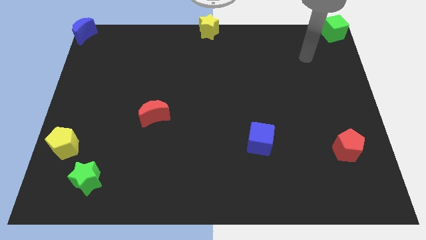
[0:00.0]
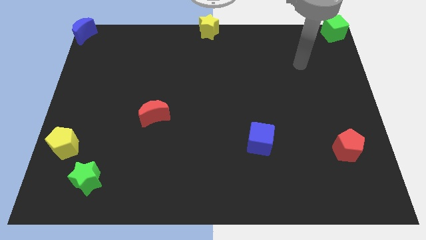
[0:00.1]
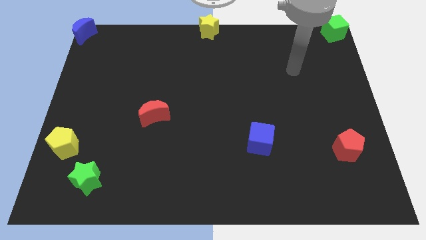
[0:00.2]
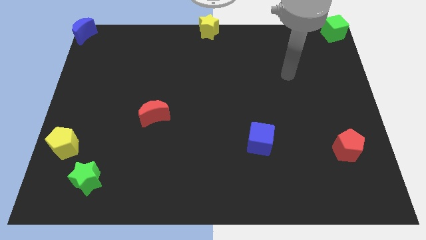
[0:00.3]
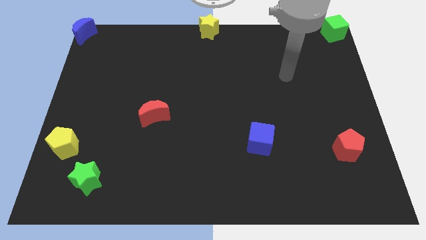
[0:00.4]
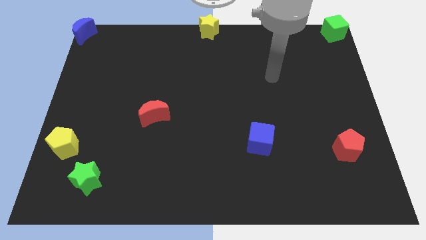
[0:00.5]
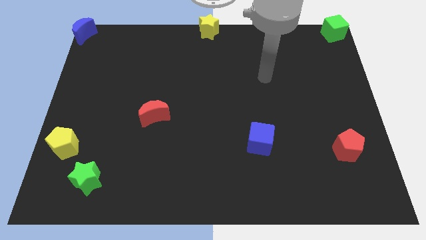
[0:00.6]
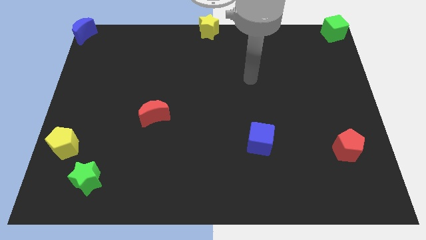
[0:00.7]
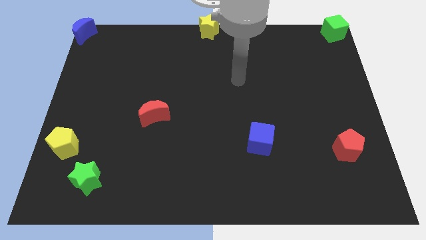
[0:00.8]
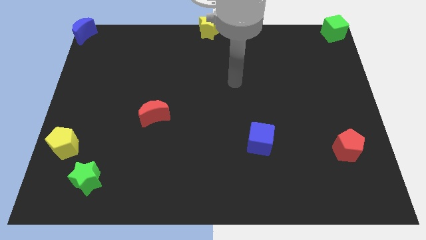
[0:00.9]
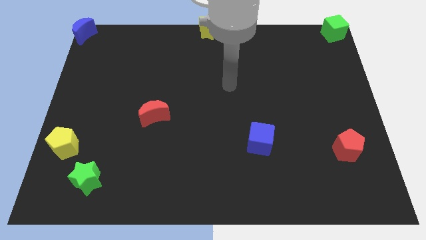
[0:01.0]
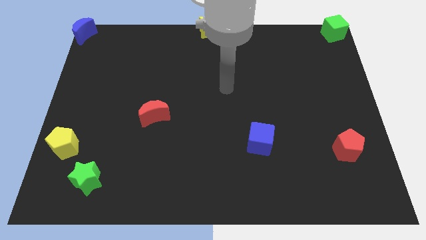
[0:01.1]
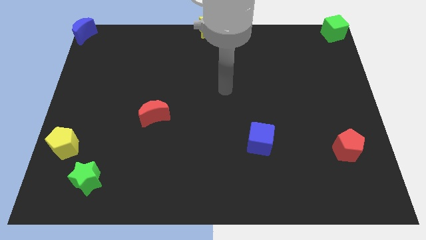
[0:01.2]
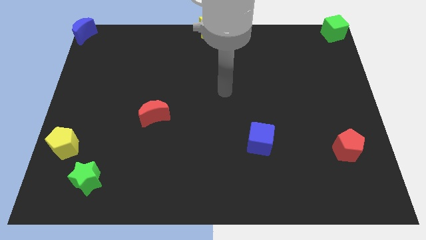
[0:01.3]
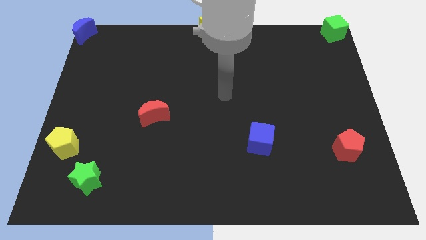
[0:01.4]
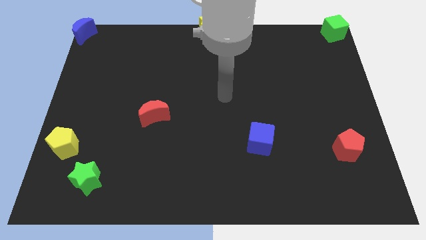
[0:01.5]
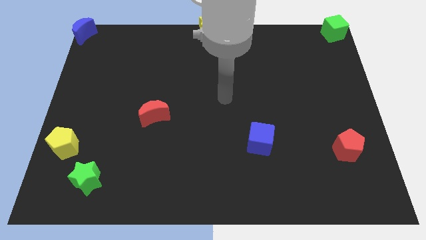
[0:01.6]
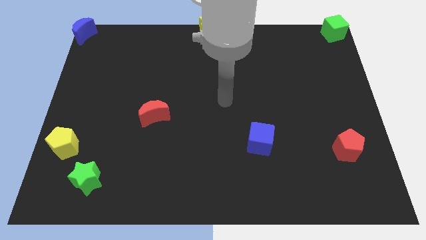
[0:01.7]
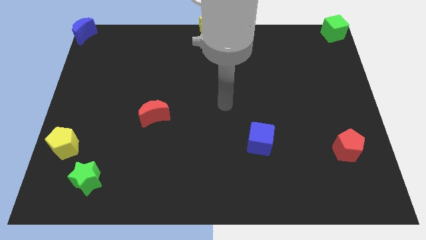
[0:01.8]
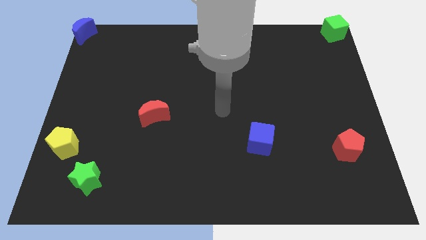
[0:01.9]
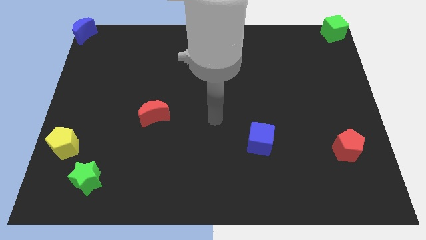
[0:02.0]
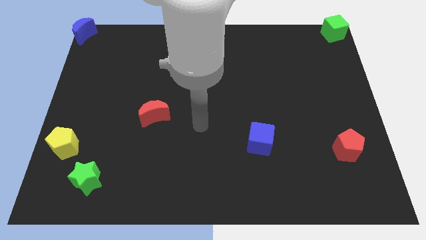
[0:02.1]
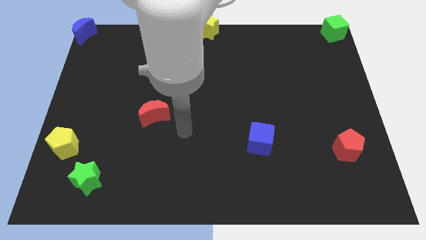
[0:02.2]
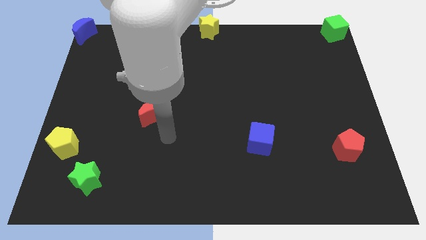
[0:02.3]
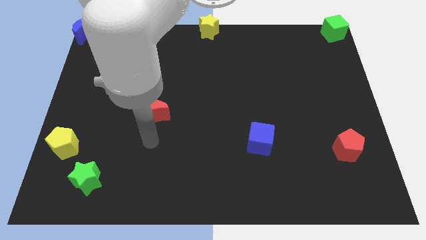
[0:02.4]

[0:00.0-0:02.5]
place your arm at the bottom of the red crescent

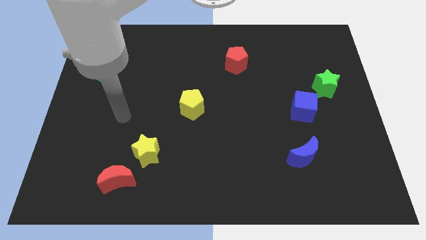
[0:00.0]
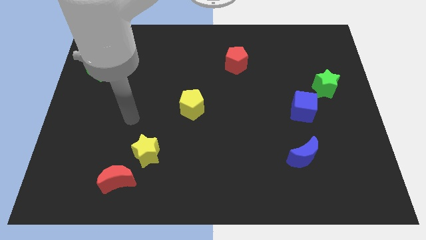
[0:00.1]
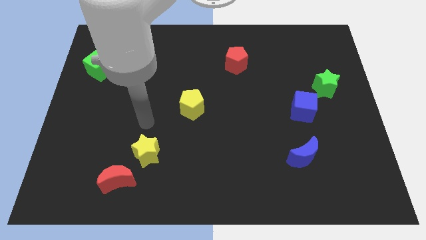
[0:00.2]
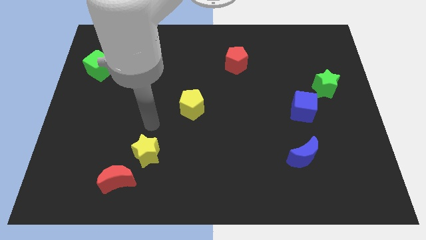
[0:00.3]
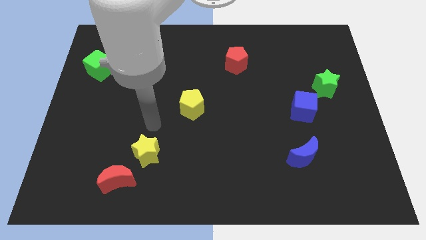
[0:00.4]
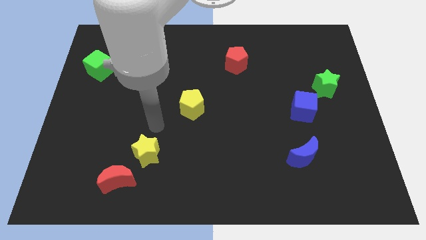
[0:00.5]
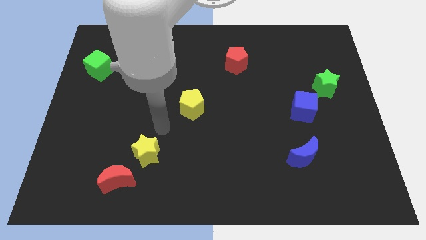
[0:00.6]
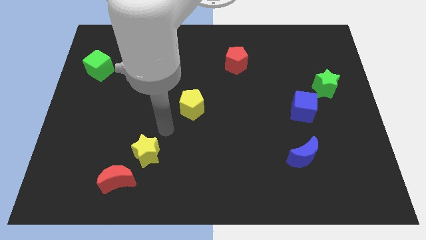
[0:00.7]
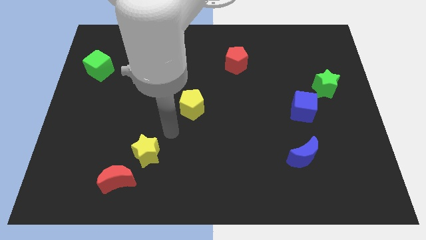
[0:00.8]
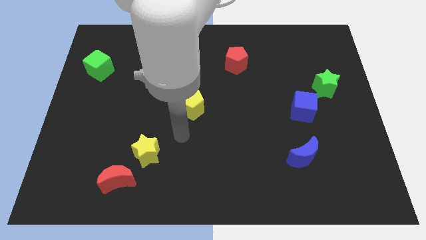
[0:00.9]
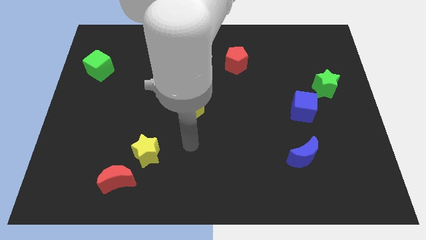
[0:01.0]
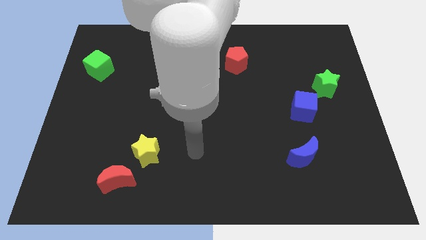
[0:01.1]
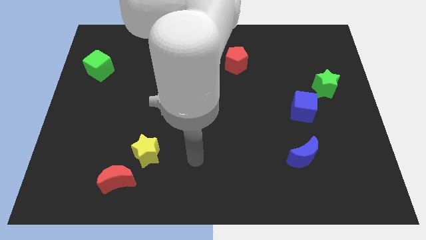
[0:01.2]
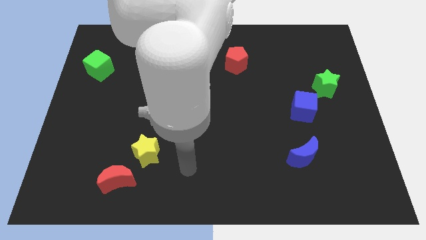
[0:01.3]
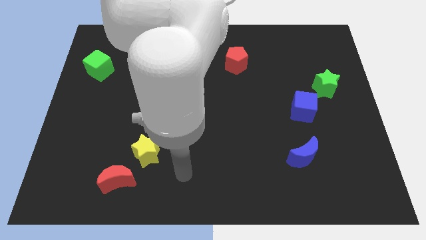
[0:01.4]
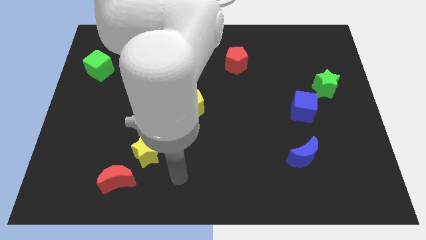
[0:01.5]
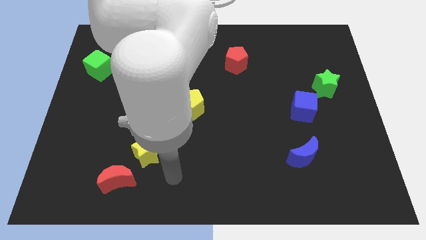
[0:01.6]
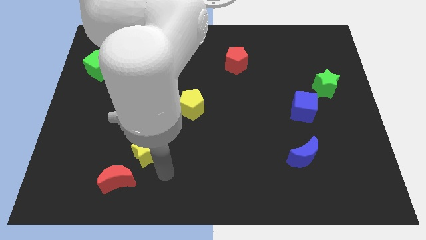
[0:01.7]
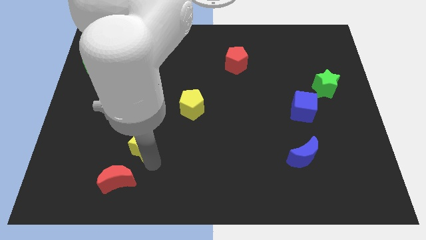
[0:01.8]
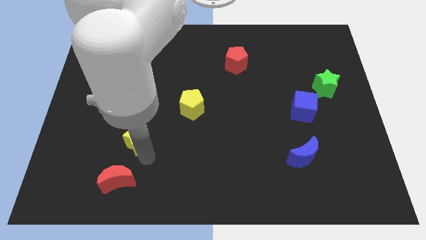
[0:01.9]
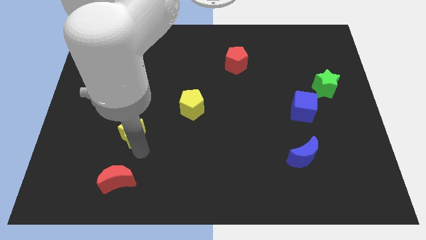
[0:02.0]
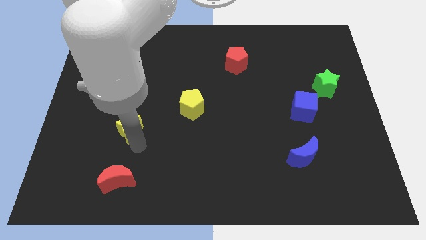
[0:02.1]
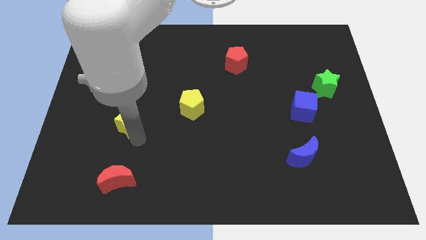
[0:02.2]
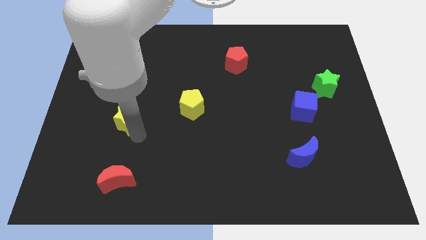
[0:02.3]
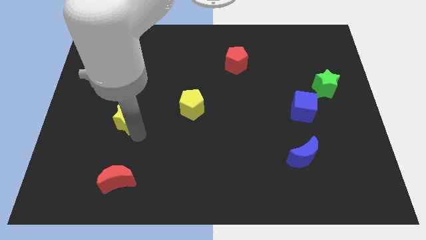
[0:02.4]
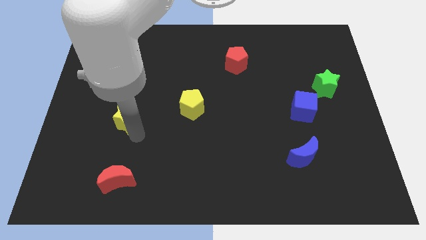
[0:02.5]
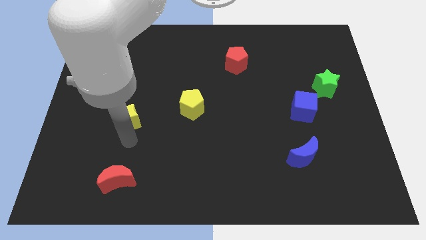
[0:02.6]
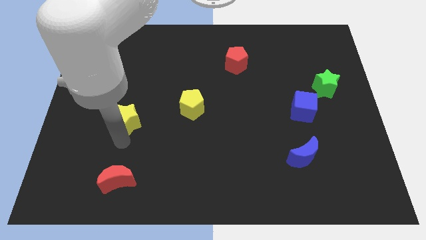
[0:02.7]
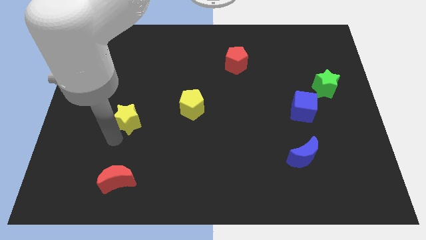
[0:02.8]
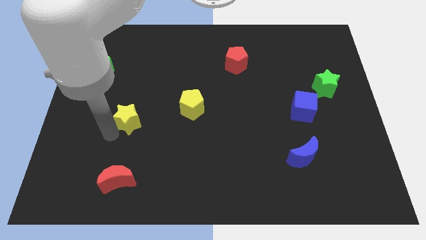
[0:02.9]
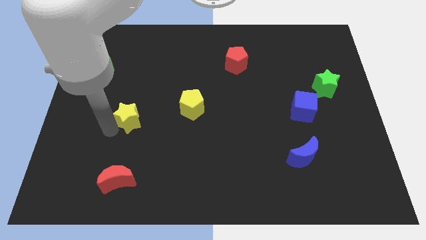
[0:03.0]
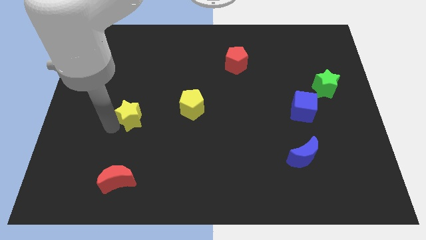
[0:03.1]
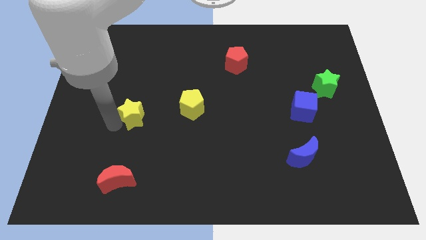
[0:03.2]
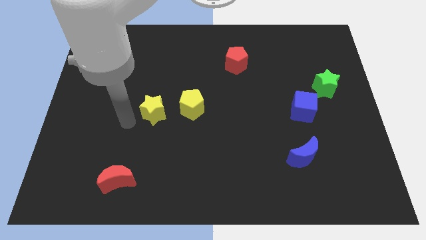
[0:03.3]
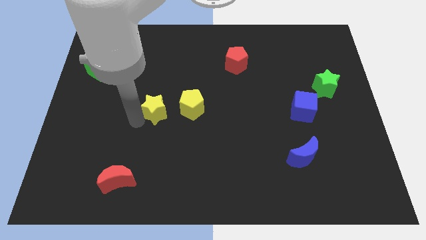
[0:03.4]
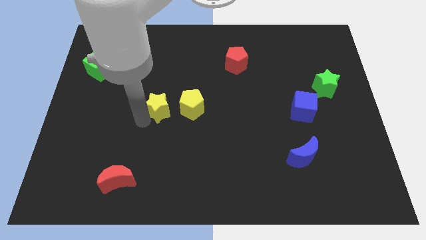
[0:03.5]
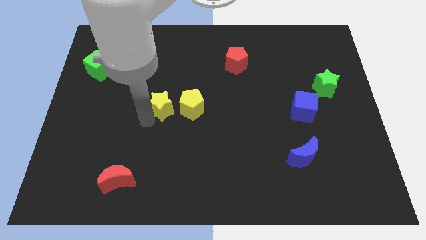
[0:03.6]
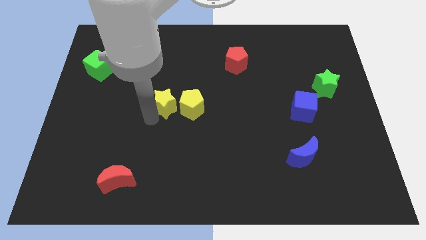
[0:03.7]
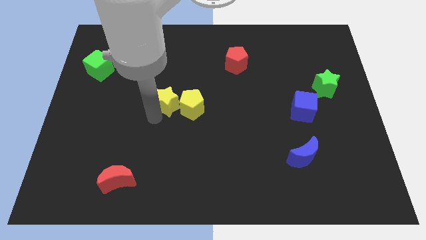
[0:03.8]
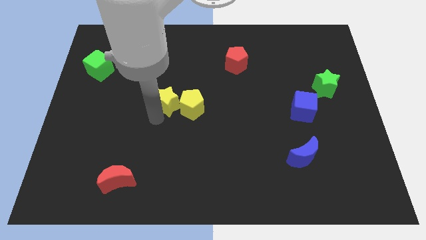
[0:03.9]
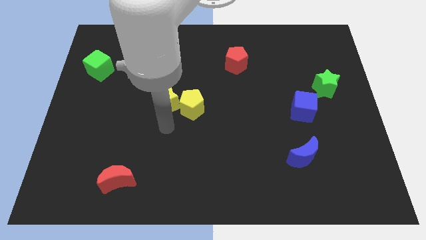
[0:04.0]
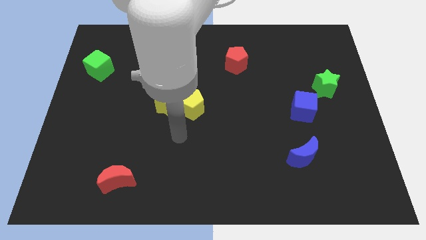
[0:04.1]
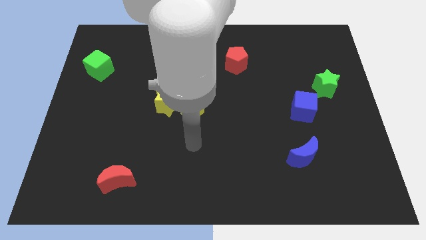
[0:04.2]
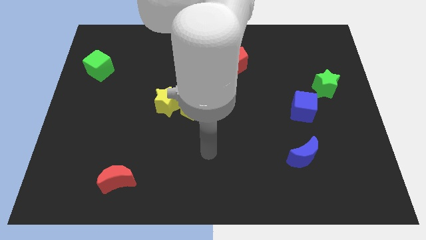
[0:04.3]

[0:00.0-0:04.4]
push the yellow star to the top of the pentagon

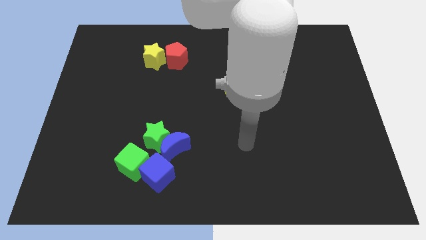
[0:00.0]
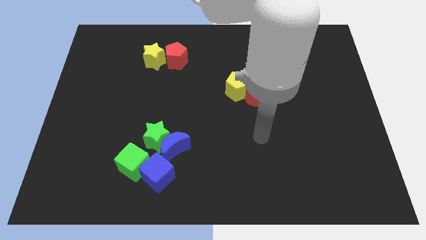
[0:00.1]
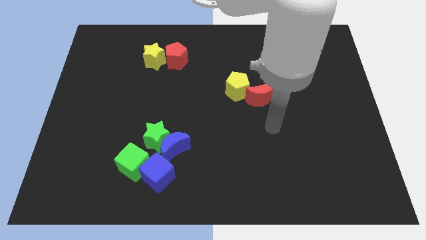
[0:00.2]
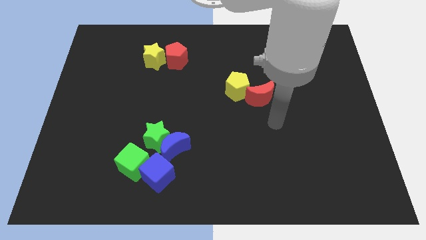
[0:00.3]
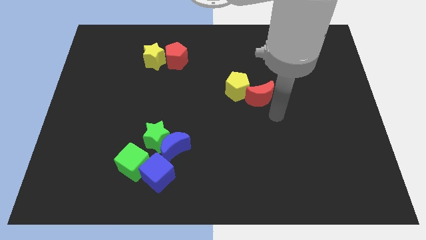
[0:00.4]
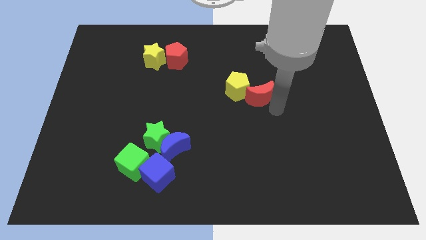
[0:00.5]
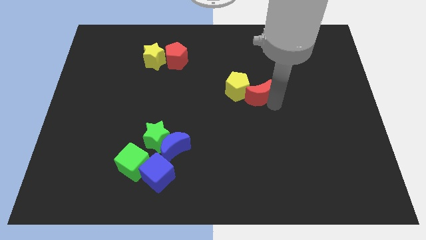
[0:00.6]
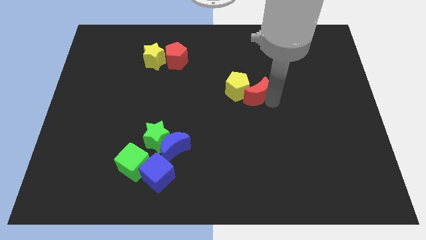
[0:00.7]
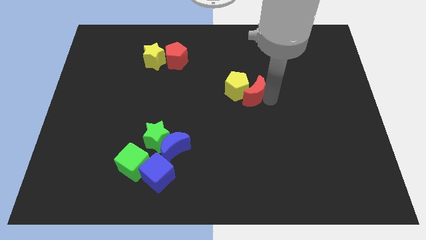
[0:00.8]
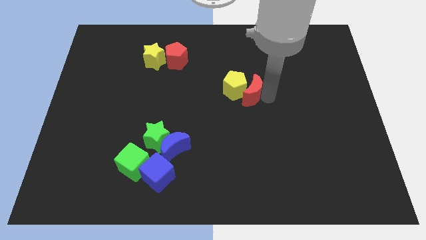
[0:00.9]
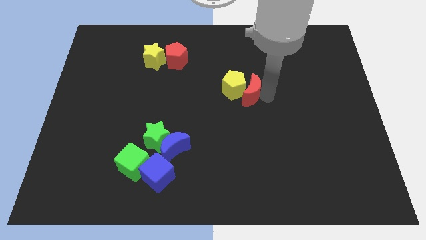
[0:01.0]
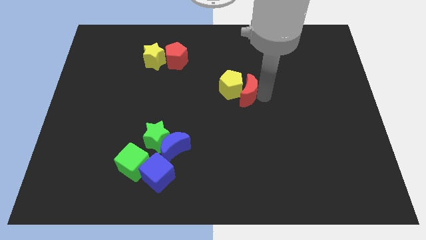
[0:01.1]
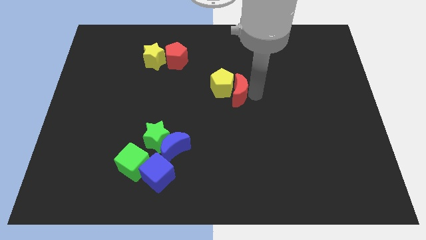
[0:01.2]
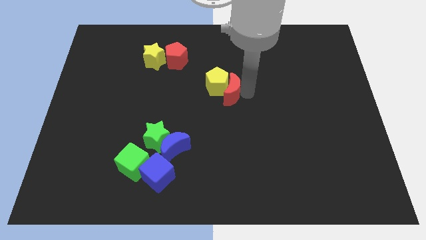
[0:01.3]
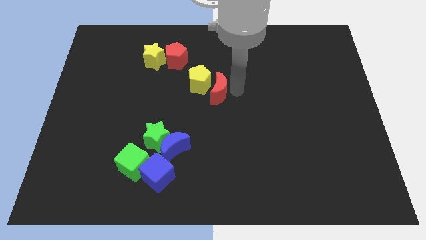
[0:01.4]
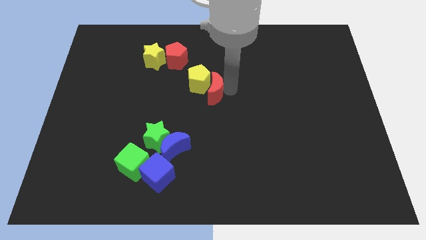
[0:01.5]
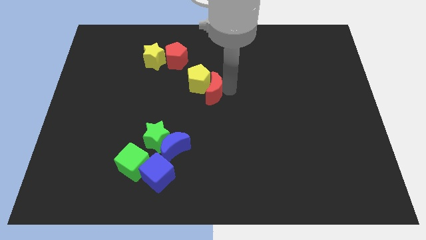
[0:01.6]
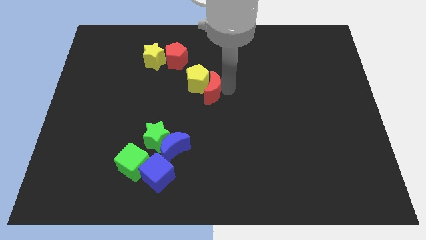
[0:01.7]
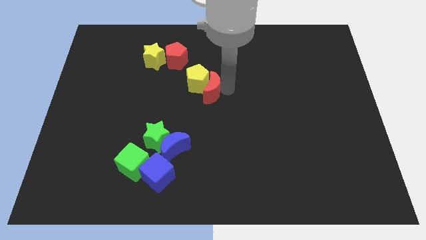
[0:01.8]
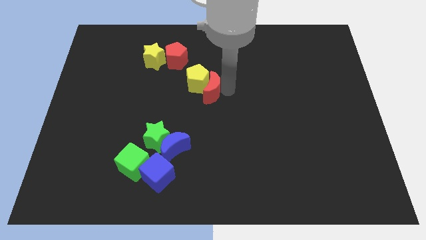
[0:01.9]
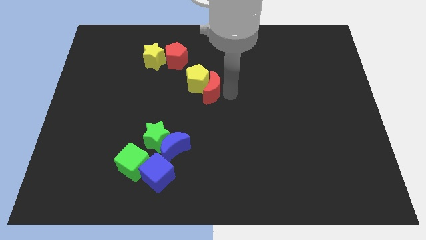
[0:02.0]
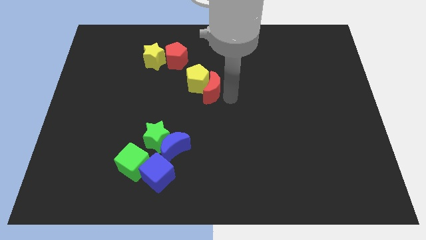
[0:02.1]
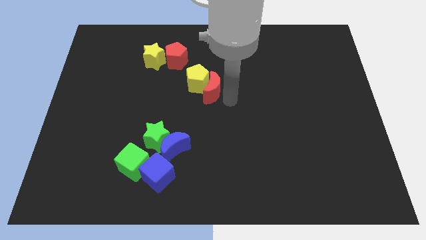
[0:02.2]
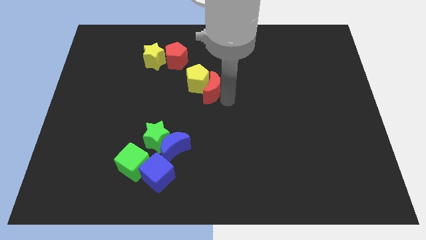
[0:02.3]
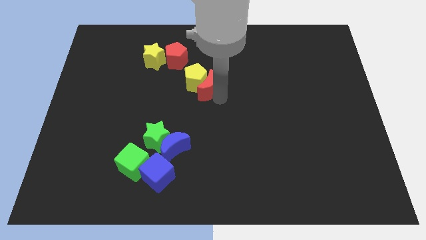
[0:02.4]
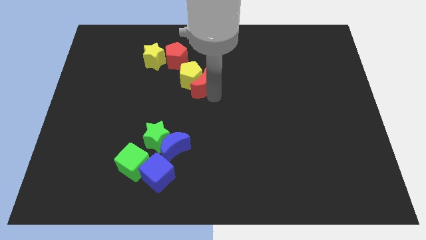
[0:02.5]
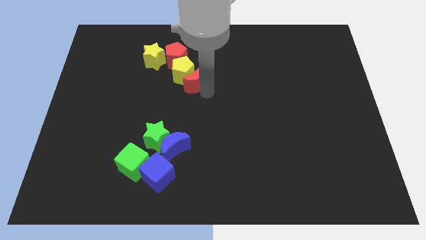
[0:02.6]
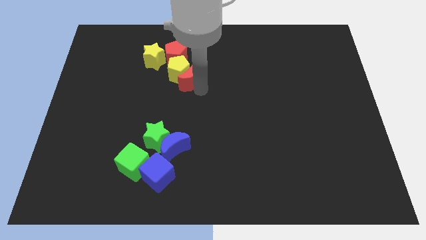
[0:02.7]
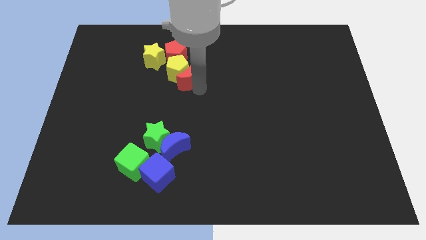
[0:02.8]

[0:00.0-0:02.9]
place yellow pentagon and red moon below red pentagon
